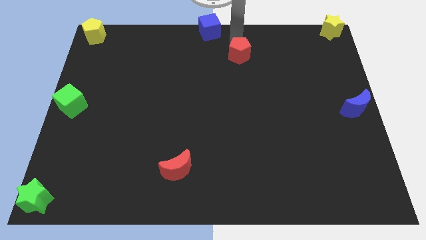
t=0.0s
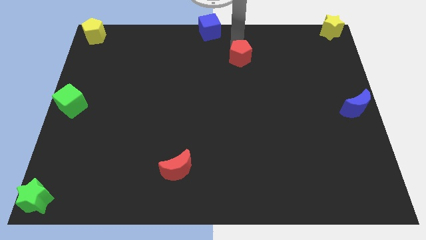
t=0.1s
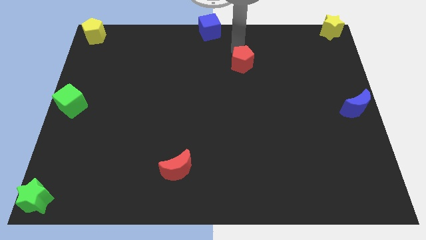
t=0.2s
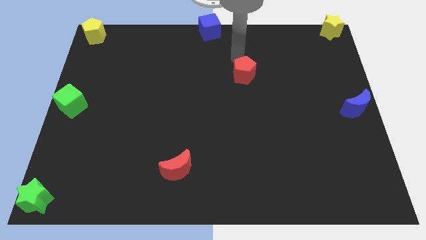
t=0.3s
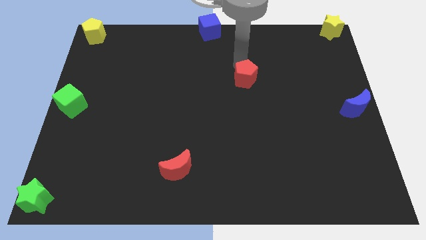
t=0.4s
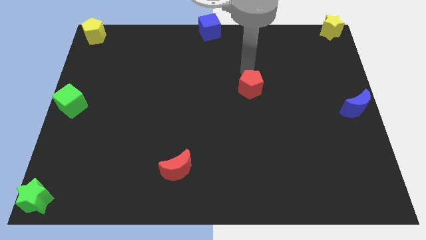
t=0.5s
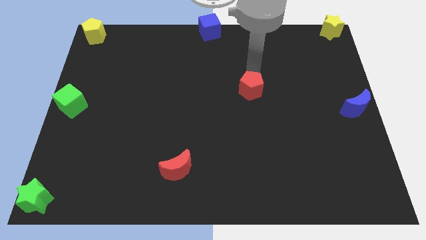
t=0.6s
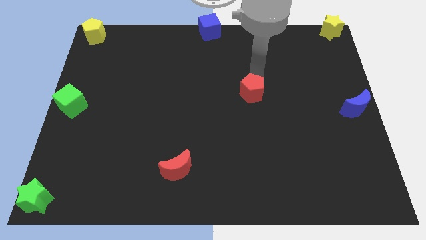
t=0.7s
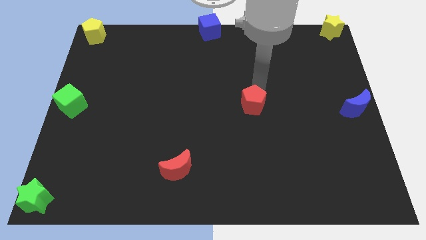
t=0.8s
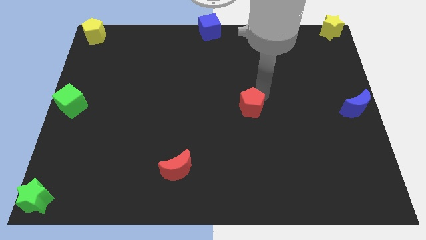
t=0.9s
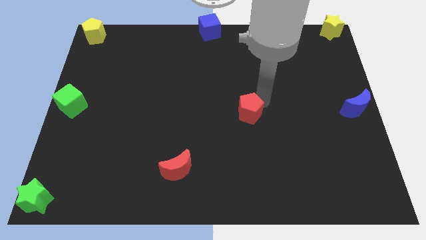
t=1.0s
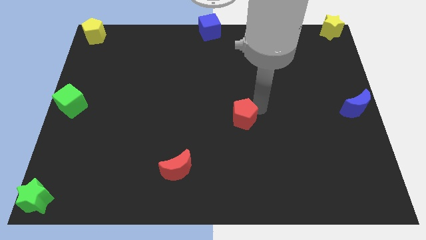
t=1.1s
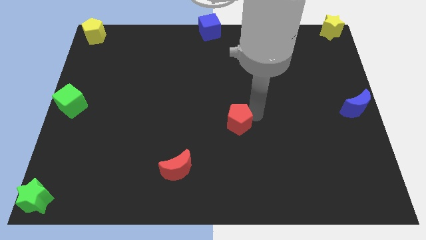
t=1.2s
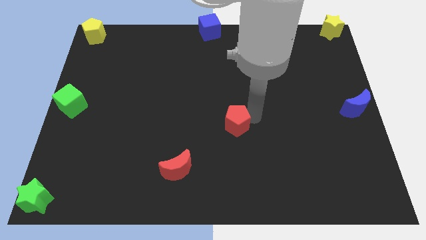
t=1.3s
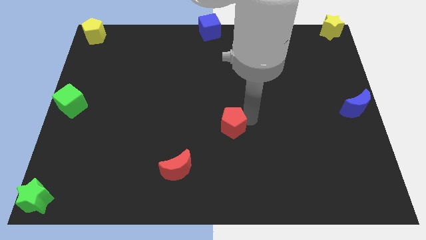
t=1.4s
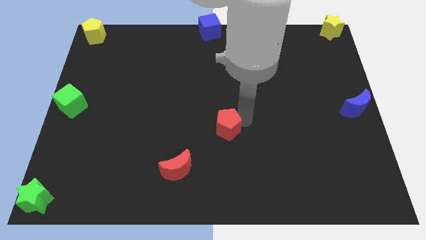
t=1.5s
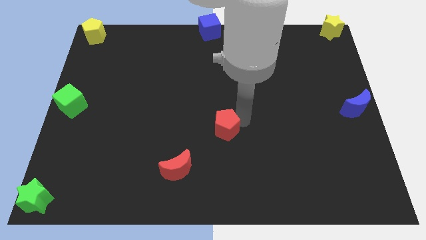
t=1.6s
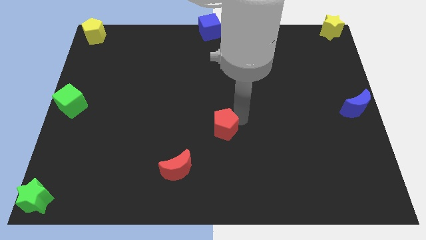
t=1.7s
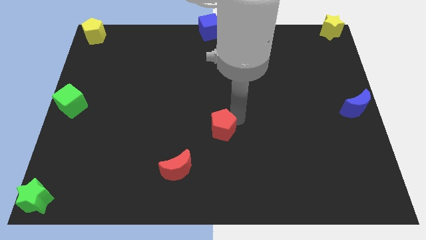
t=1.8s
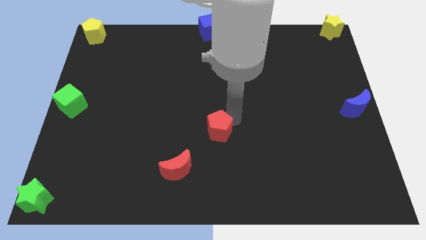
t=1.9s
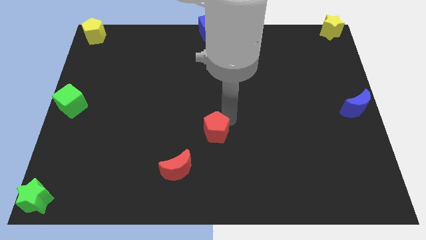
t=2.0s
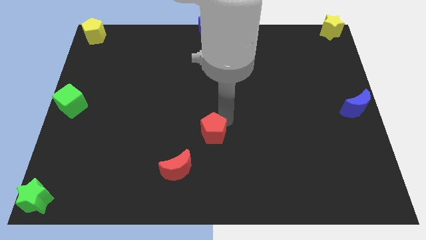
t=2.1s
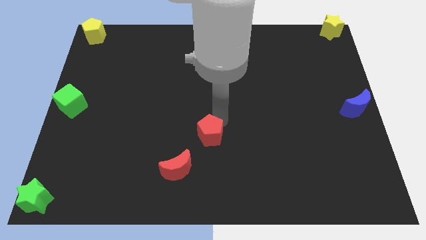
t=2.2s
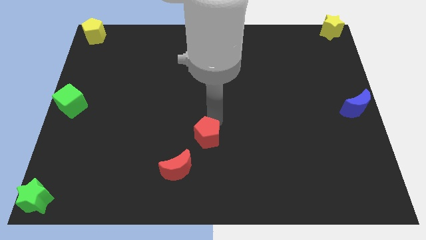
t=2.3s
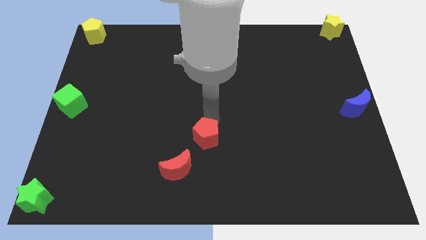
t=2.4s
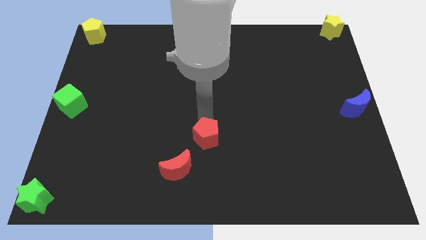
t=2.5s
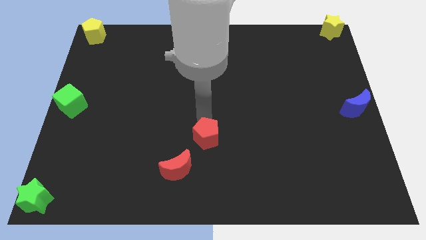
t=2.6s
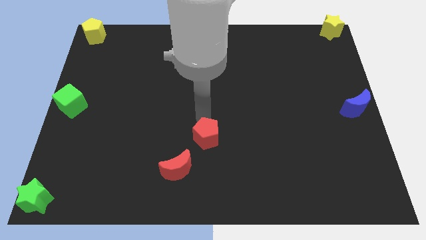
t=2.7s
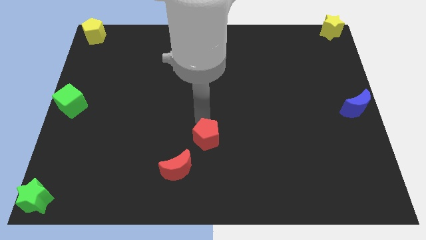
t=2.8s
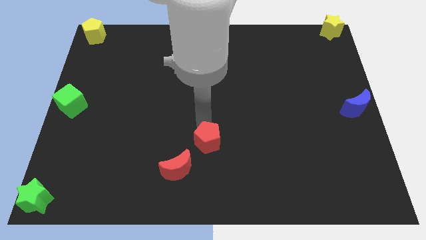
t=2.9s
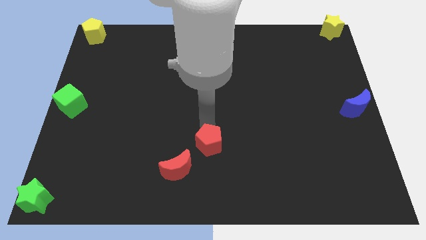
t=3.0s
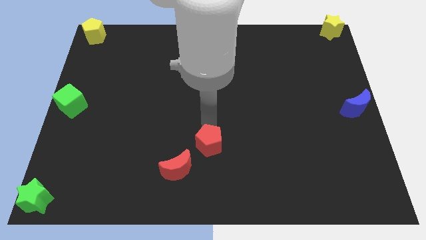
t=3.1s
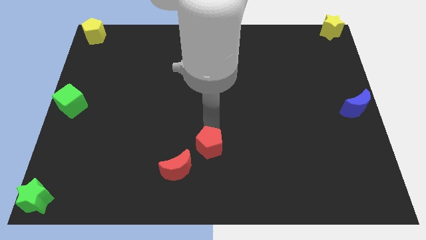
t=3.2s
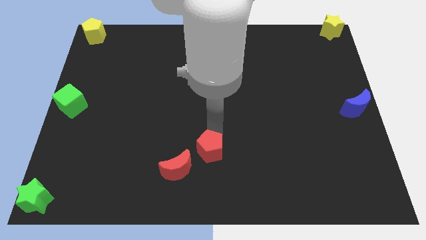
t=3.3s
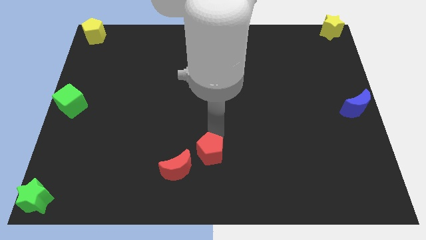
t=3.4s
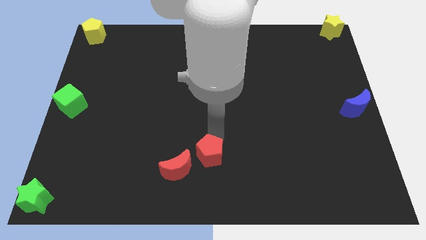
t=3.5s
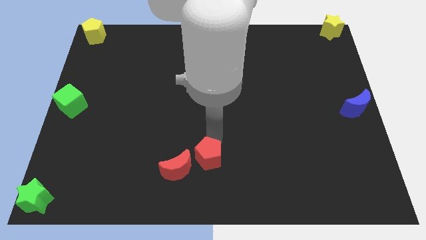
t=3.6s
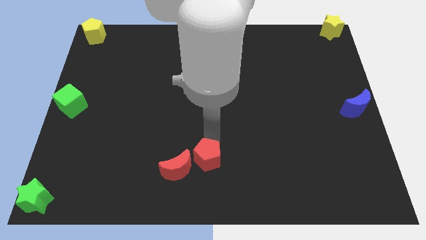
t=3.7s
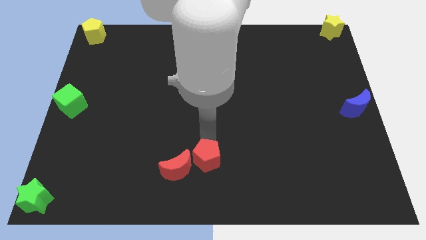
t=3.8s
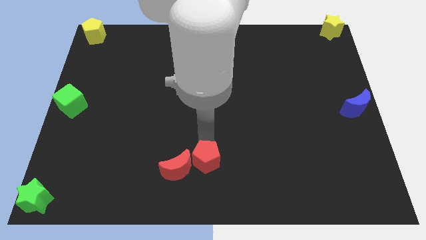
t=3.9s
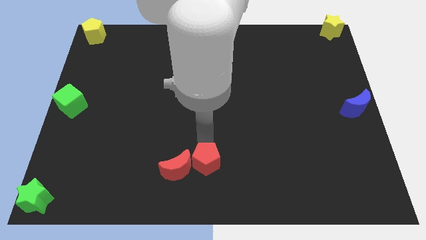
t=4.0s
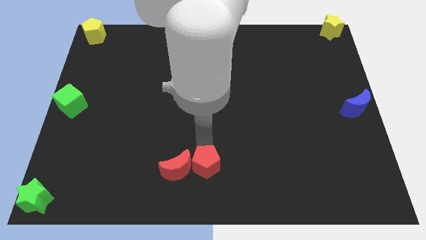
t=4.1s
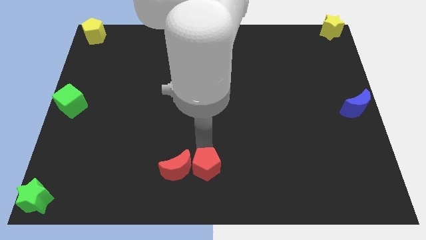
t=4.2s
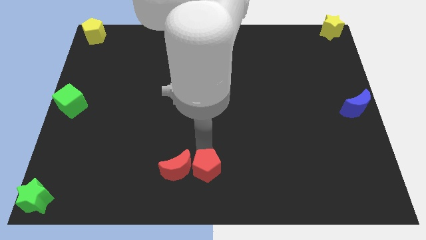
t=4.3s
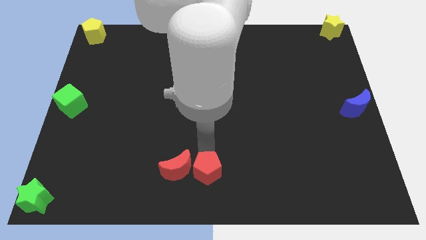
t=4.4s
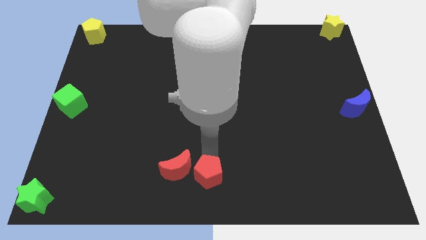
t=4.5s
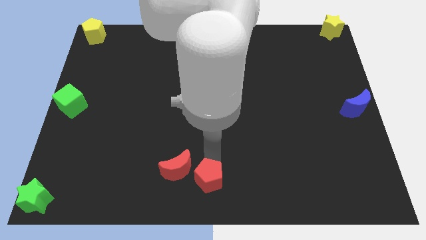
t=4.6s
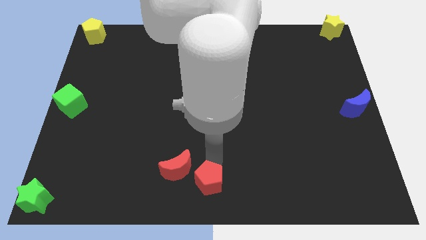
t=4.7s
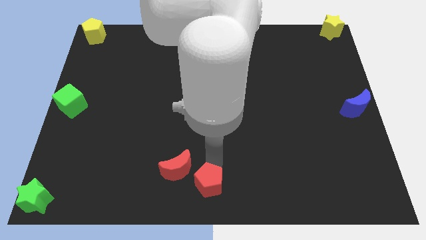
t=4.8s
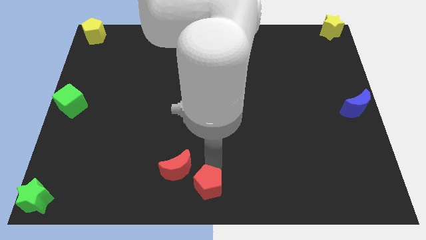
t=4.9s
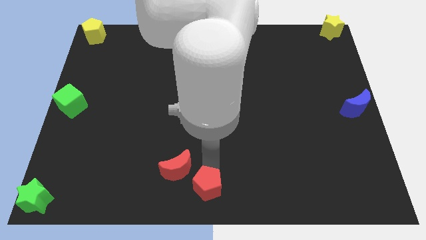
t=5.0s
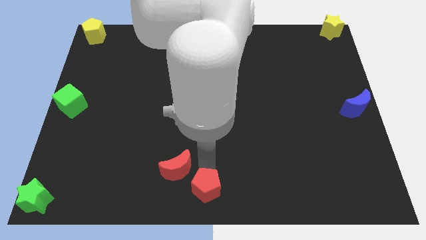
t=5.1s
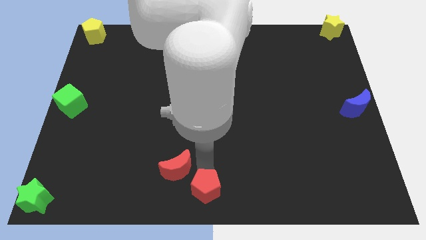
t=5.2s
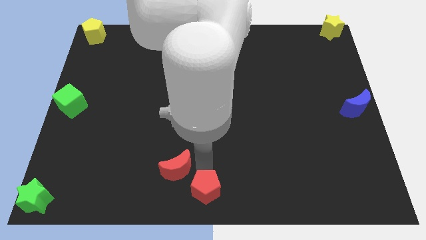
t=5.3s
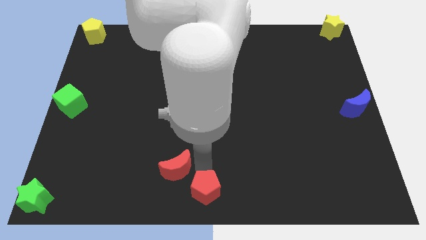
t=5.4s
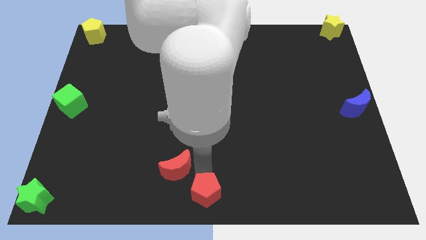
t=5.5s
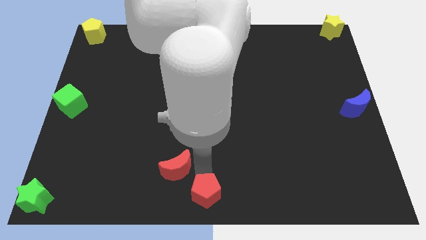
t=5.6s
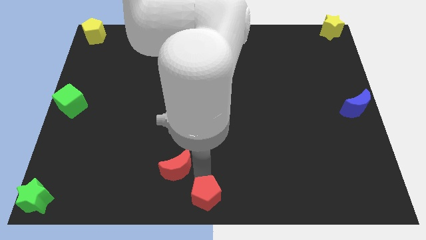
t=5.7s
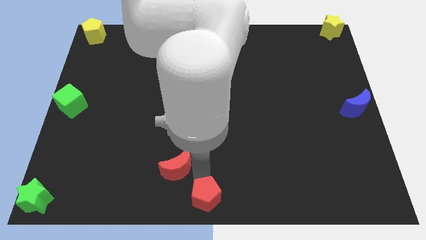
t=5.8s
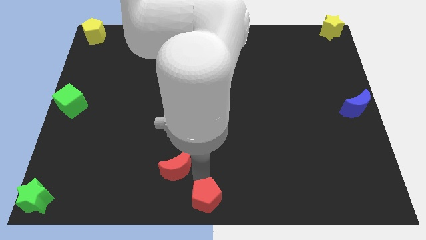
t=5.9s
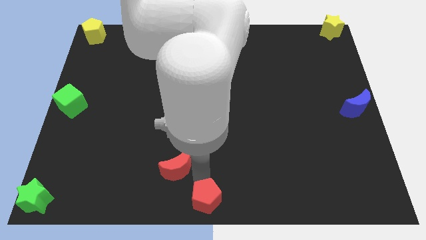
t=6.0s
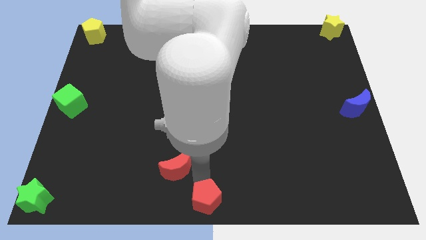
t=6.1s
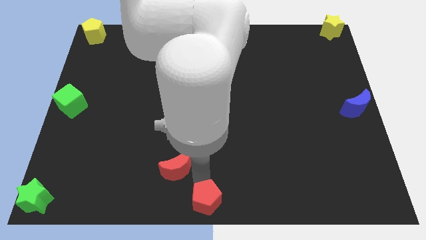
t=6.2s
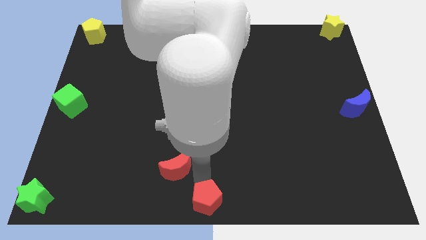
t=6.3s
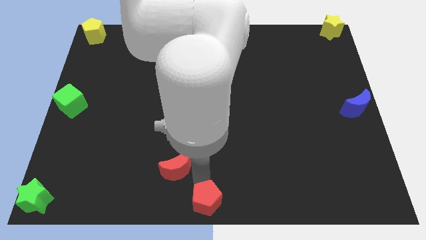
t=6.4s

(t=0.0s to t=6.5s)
place the red pentagon at the bottom center of the board

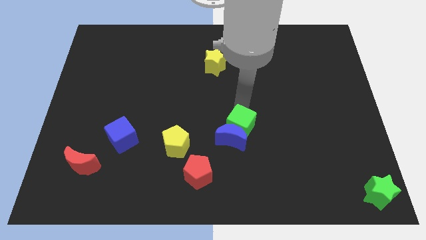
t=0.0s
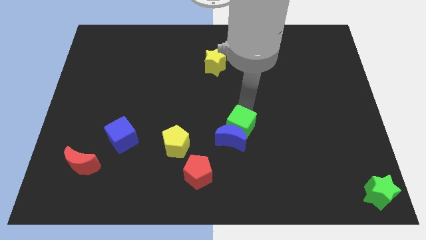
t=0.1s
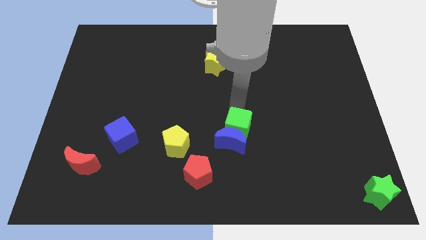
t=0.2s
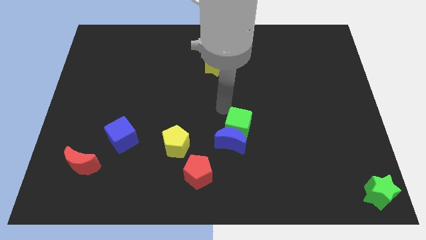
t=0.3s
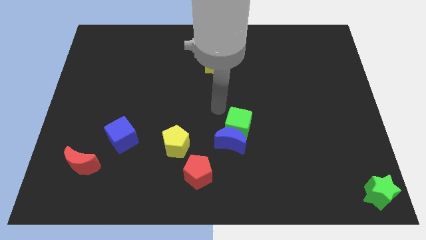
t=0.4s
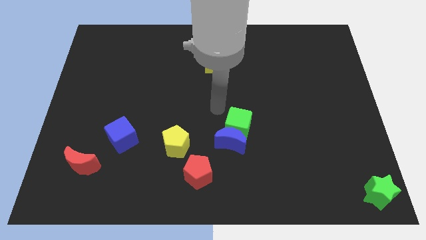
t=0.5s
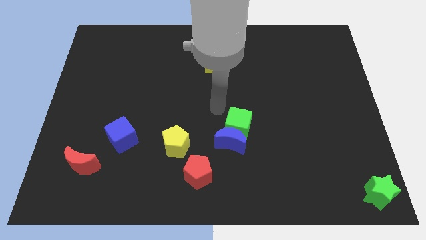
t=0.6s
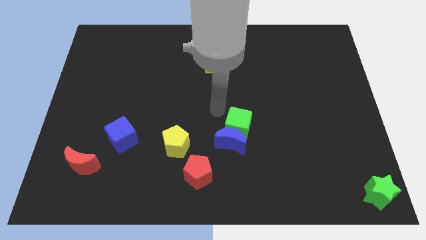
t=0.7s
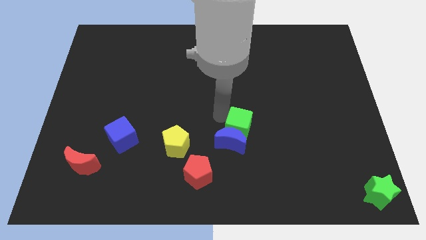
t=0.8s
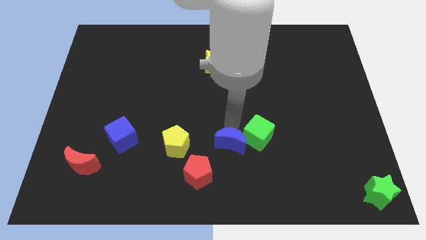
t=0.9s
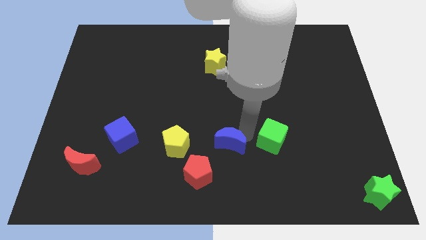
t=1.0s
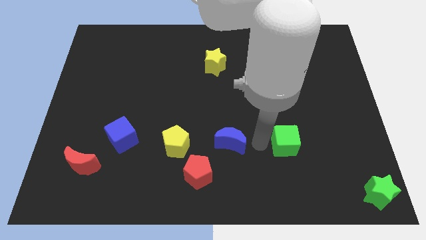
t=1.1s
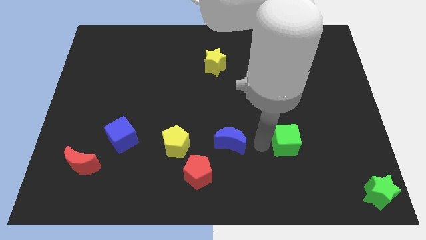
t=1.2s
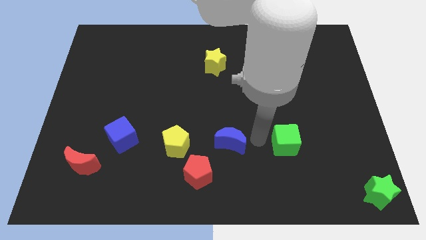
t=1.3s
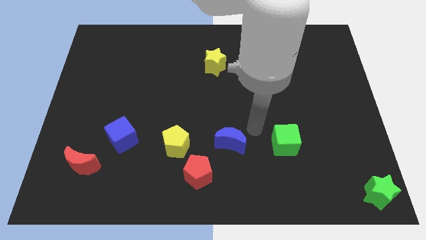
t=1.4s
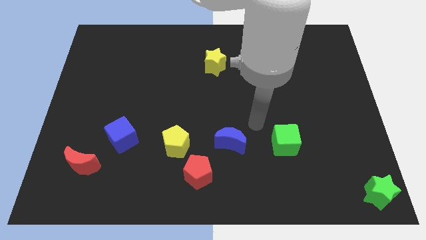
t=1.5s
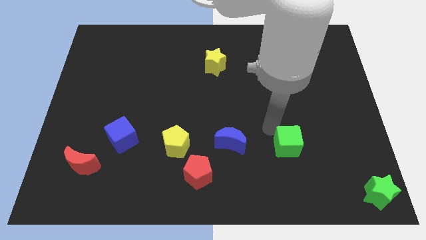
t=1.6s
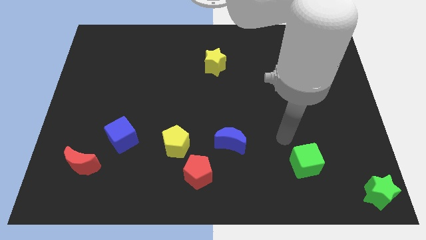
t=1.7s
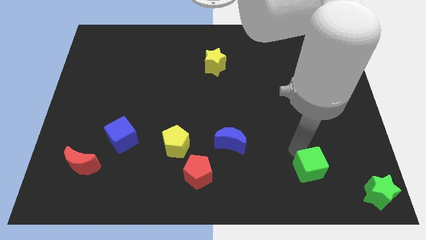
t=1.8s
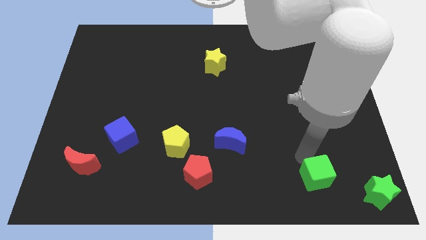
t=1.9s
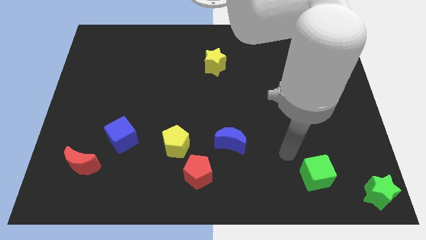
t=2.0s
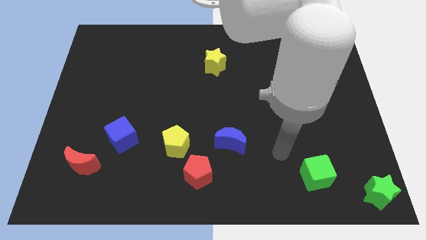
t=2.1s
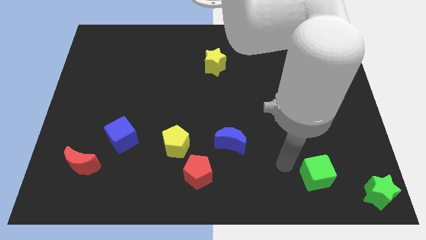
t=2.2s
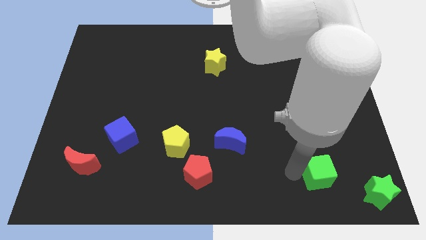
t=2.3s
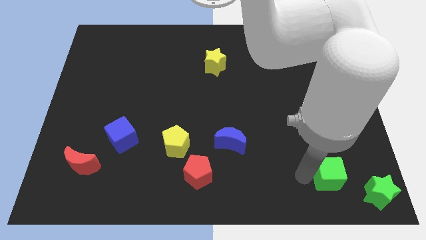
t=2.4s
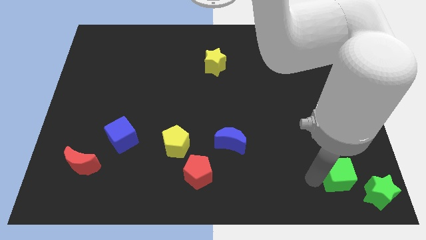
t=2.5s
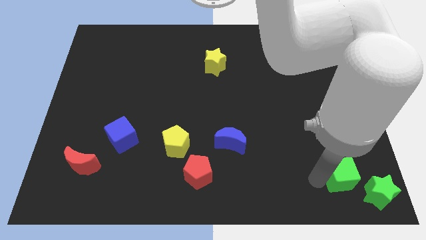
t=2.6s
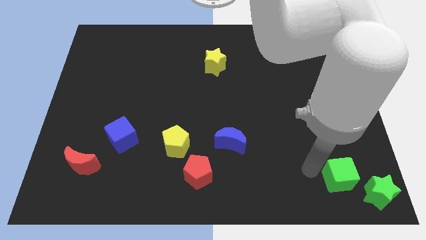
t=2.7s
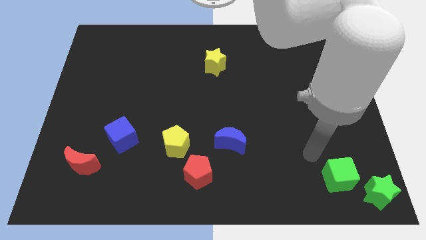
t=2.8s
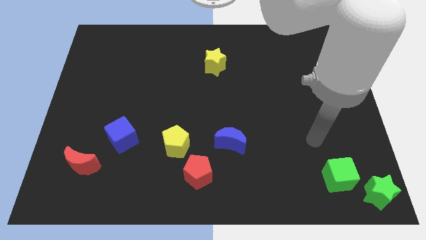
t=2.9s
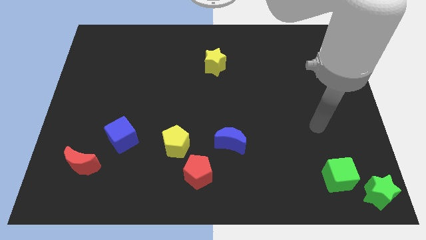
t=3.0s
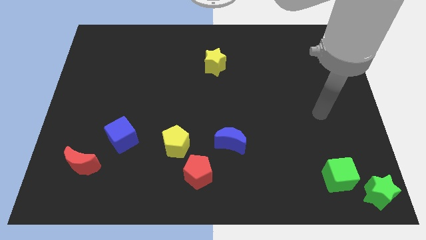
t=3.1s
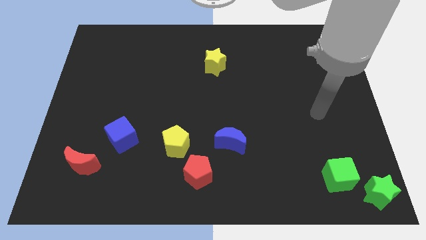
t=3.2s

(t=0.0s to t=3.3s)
move the green cube towards the bottom right of the board
